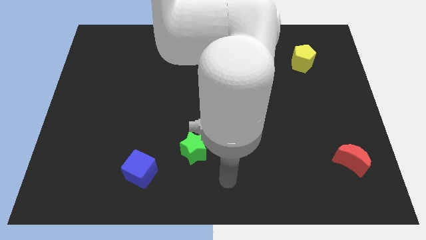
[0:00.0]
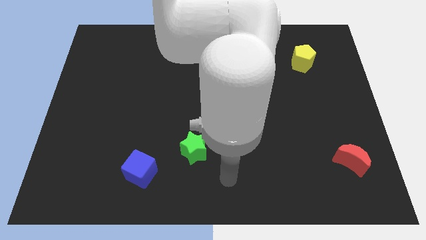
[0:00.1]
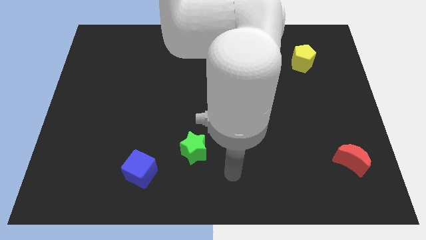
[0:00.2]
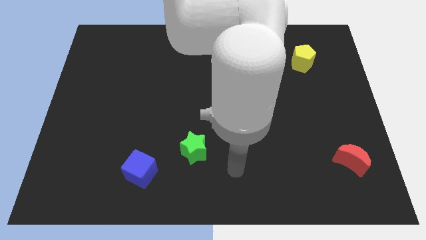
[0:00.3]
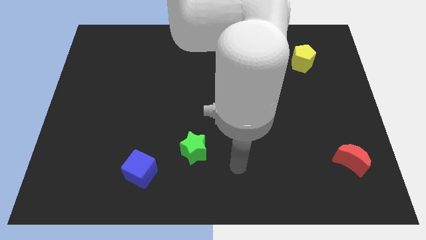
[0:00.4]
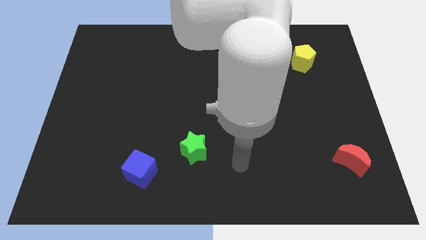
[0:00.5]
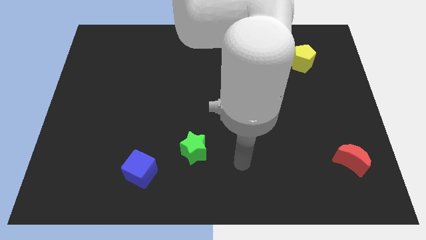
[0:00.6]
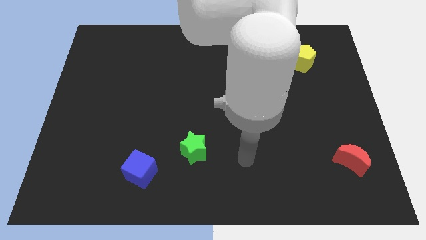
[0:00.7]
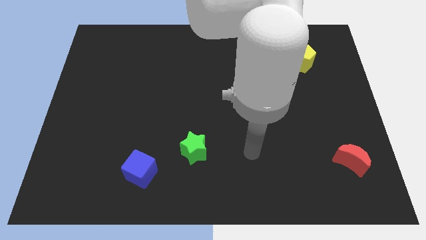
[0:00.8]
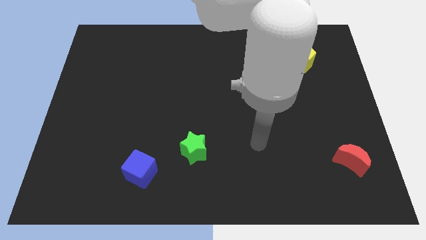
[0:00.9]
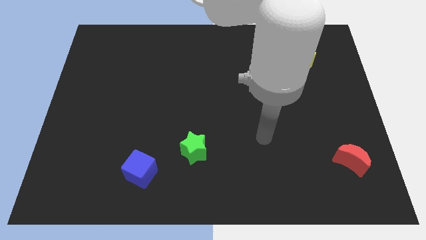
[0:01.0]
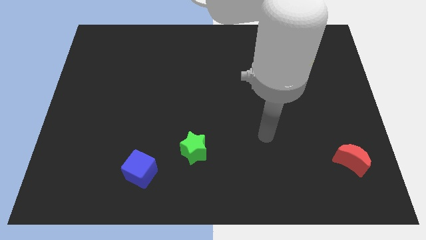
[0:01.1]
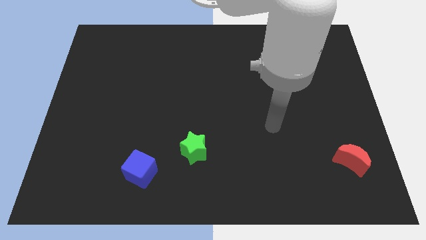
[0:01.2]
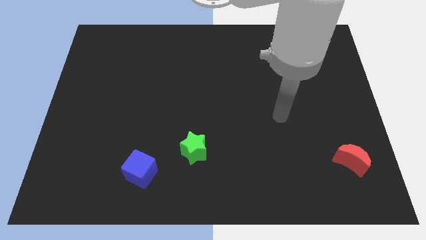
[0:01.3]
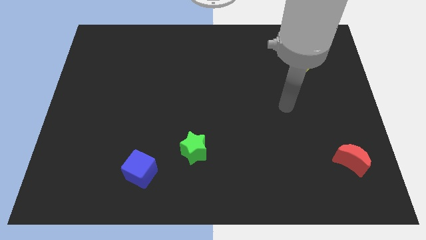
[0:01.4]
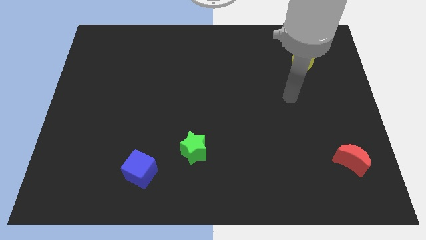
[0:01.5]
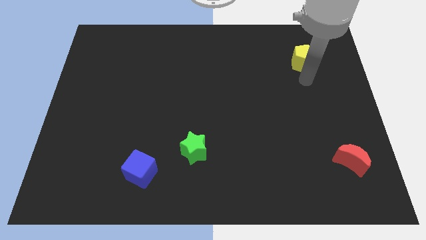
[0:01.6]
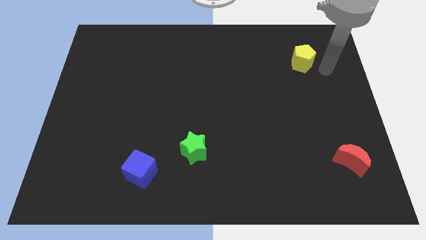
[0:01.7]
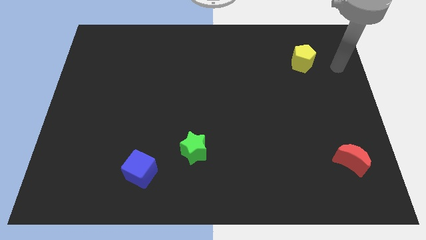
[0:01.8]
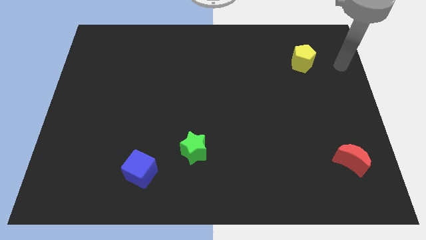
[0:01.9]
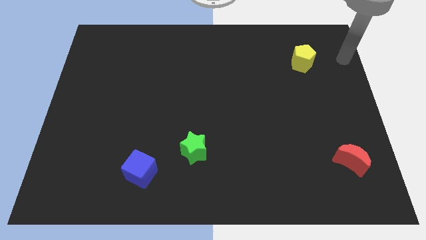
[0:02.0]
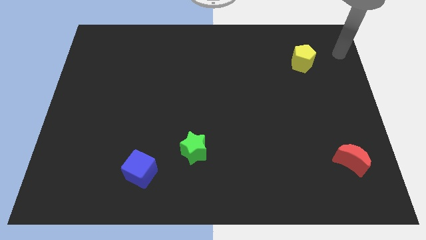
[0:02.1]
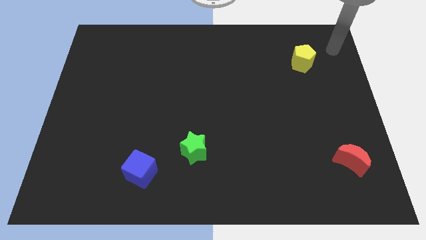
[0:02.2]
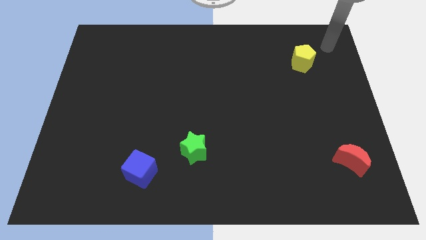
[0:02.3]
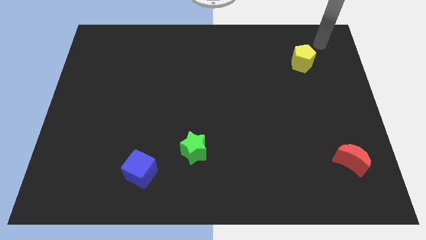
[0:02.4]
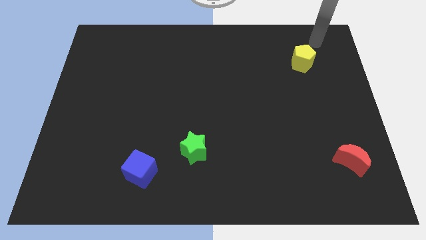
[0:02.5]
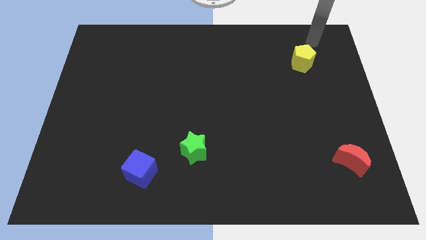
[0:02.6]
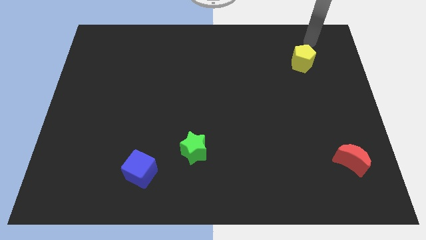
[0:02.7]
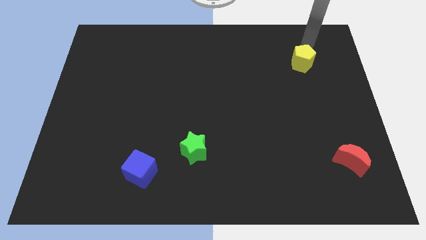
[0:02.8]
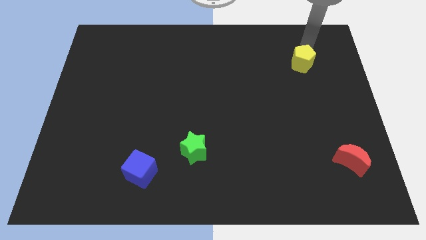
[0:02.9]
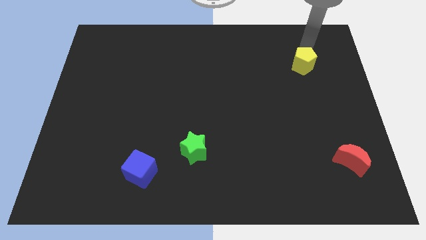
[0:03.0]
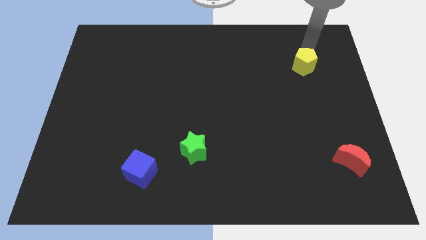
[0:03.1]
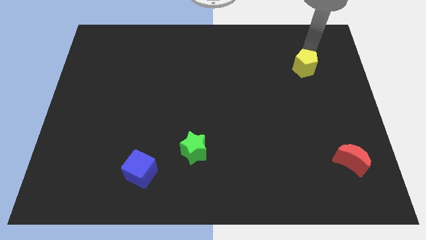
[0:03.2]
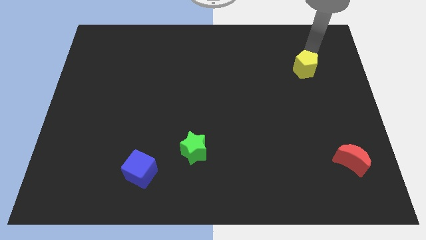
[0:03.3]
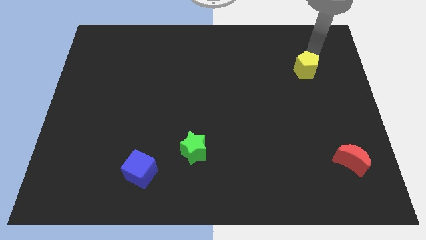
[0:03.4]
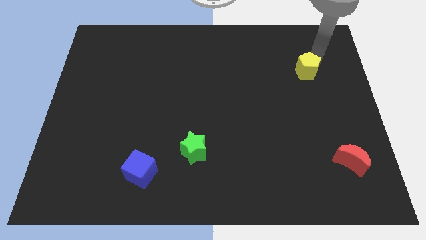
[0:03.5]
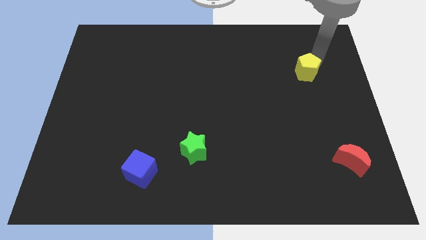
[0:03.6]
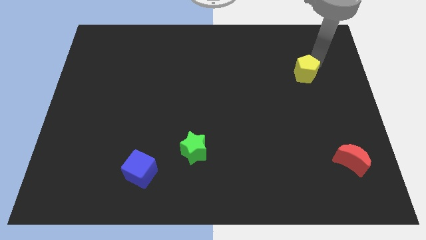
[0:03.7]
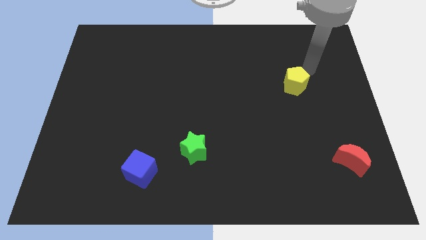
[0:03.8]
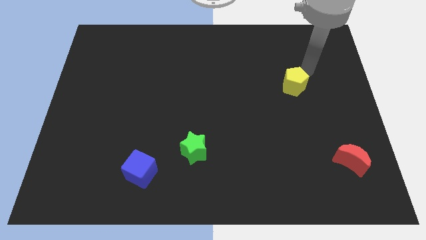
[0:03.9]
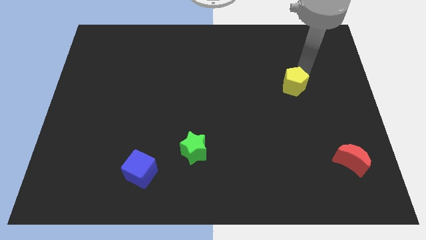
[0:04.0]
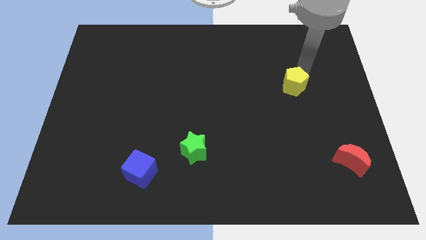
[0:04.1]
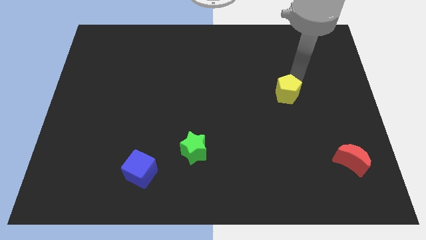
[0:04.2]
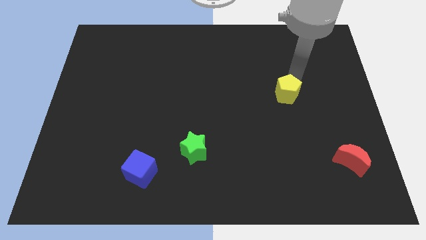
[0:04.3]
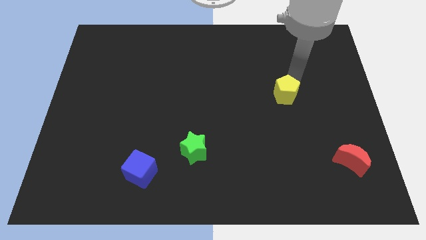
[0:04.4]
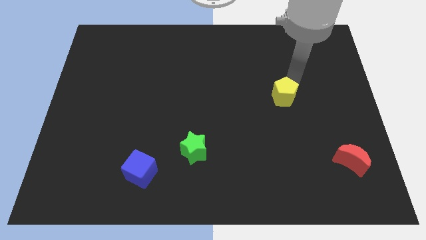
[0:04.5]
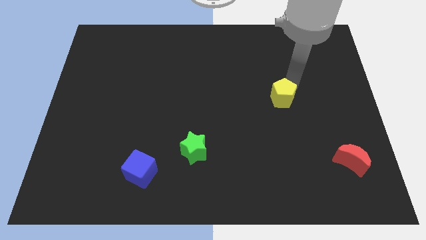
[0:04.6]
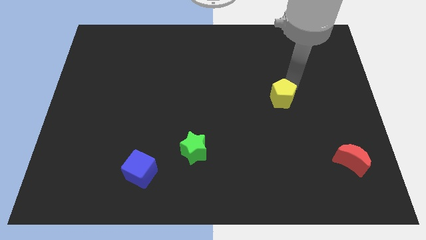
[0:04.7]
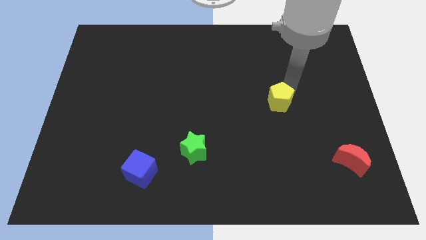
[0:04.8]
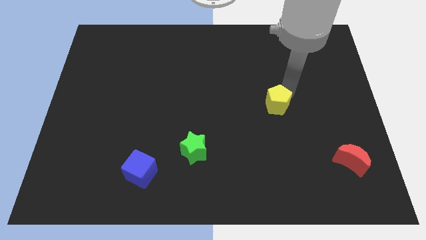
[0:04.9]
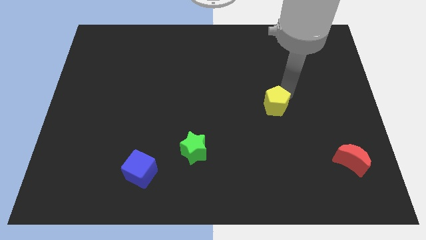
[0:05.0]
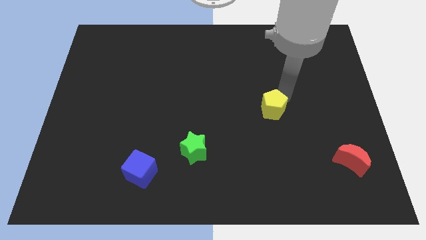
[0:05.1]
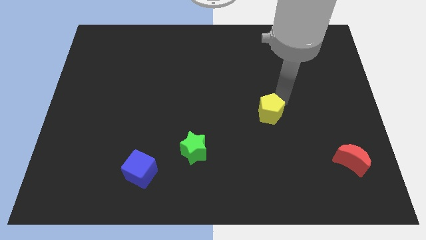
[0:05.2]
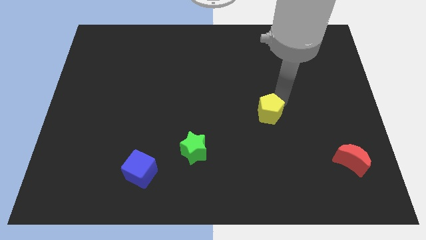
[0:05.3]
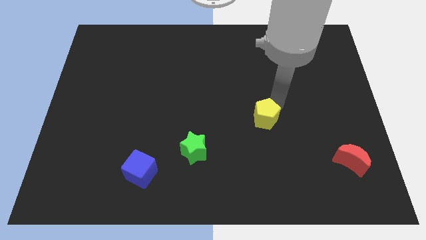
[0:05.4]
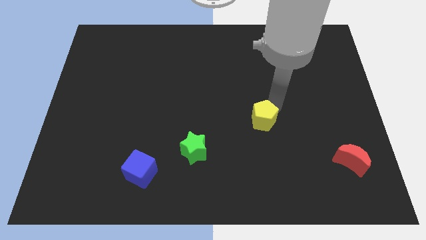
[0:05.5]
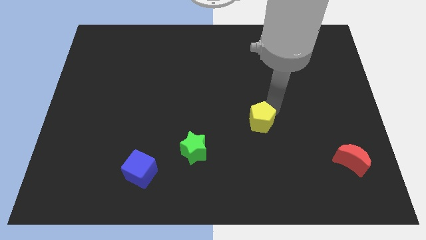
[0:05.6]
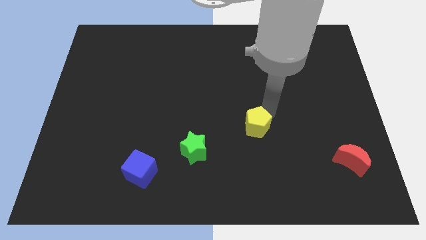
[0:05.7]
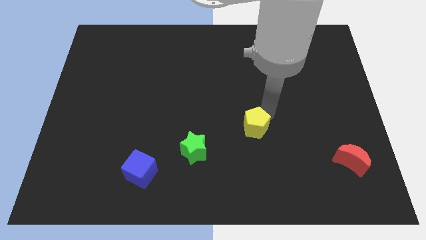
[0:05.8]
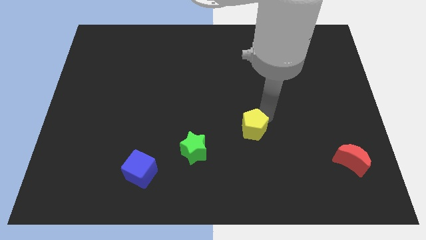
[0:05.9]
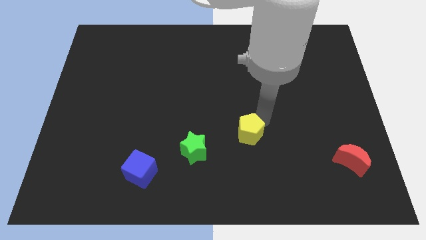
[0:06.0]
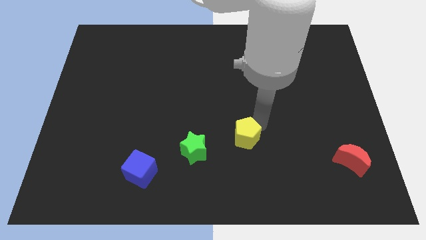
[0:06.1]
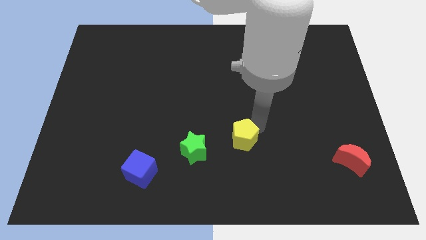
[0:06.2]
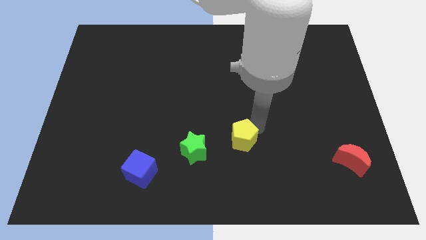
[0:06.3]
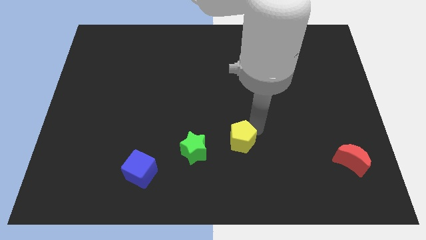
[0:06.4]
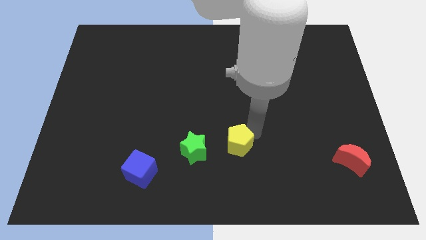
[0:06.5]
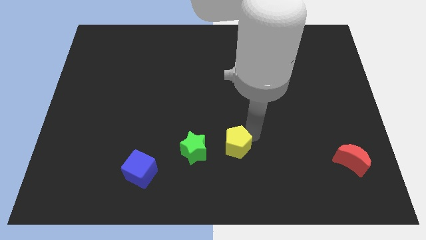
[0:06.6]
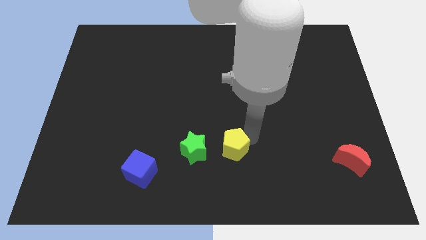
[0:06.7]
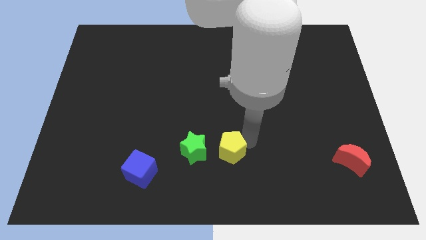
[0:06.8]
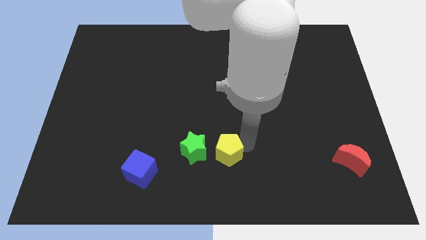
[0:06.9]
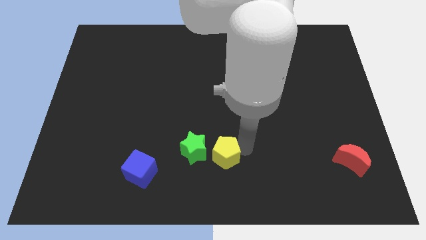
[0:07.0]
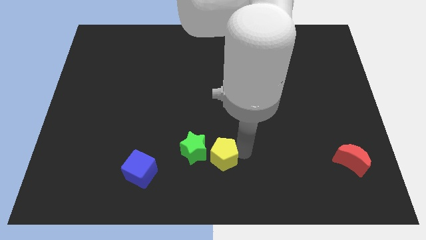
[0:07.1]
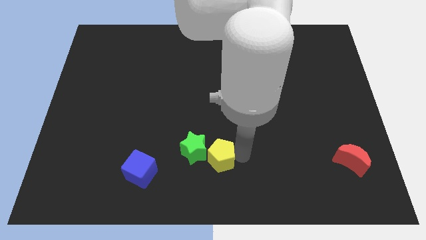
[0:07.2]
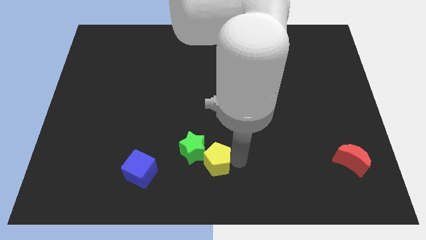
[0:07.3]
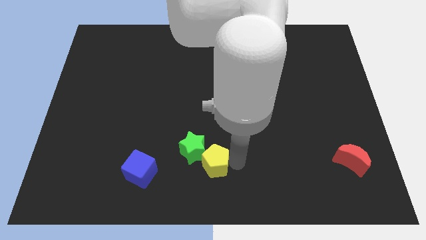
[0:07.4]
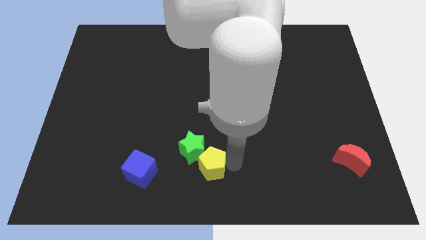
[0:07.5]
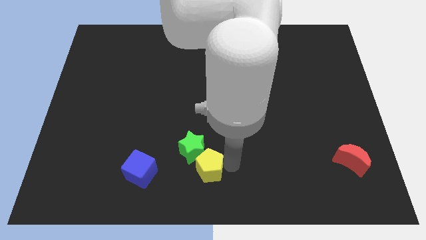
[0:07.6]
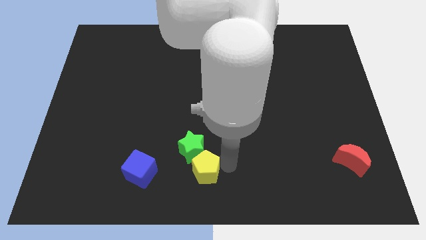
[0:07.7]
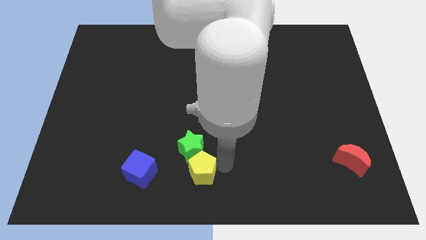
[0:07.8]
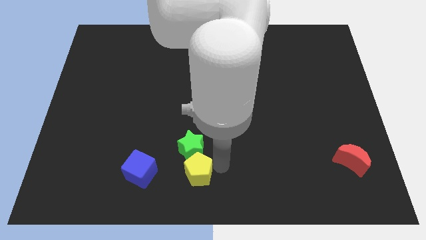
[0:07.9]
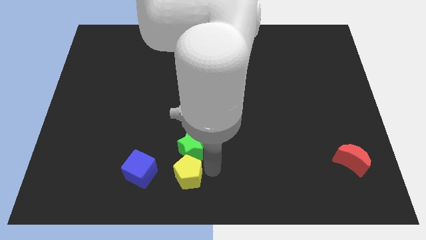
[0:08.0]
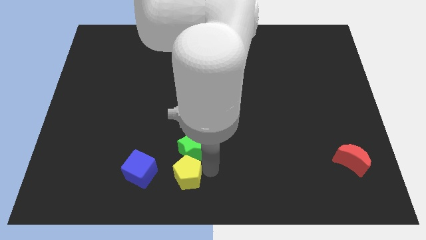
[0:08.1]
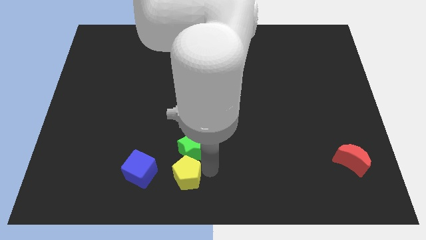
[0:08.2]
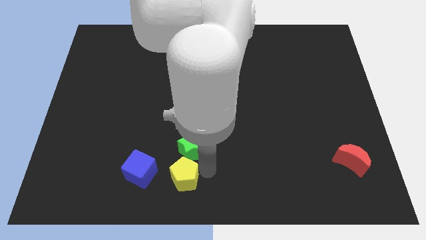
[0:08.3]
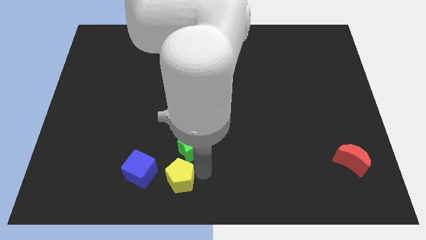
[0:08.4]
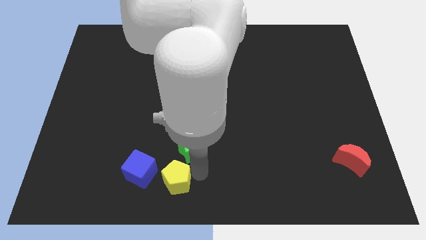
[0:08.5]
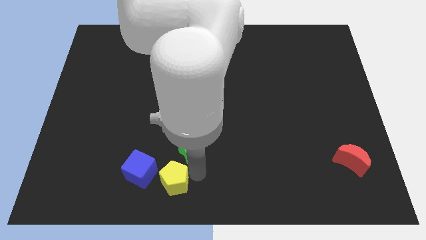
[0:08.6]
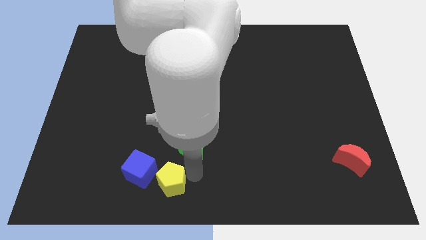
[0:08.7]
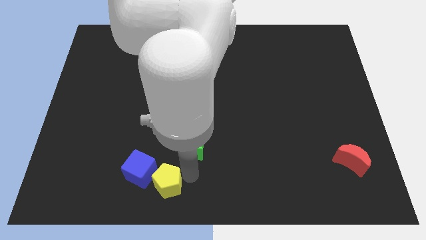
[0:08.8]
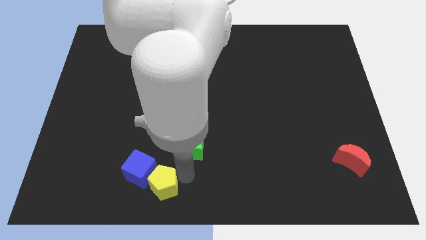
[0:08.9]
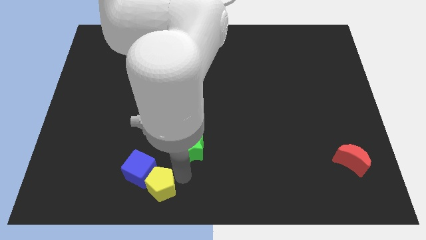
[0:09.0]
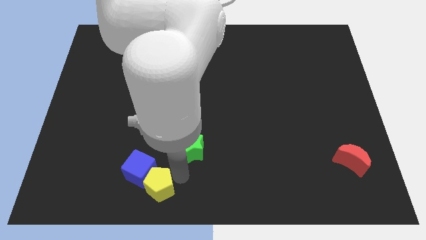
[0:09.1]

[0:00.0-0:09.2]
push the yellow pentagon towards the blue block
